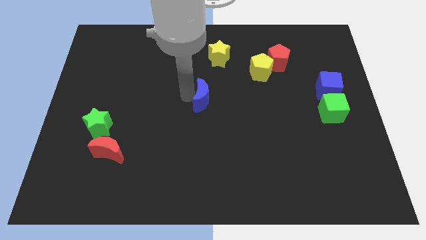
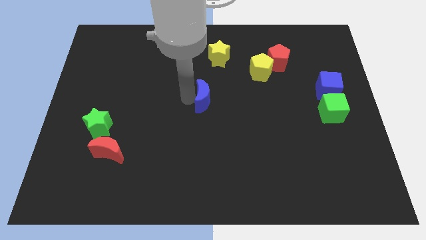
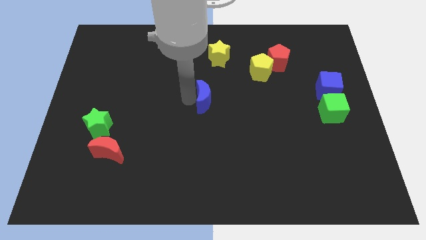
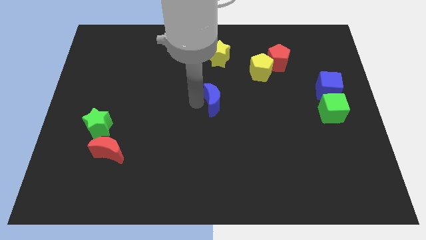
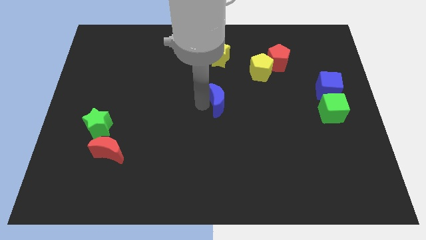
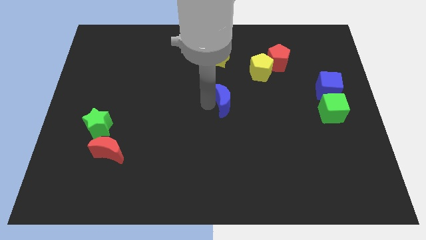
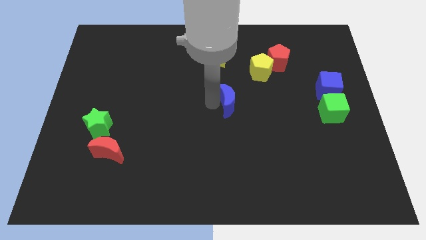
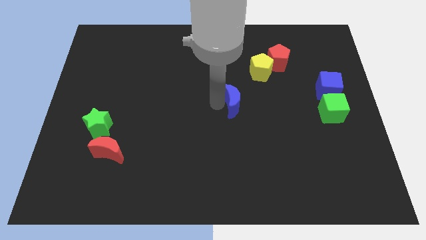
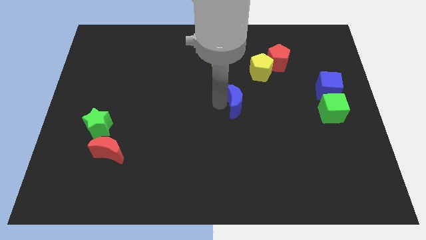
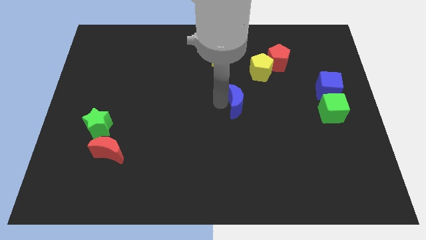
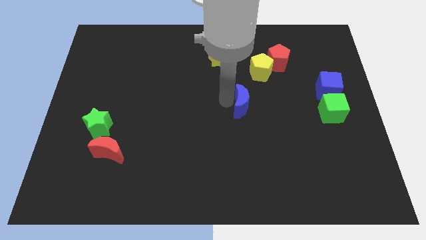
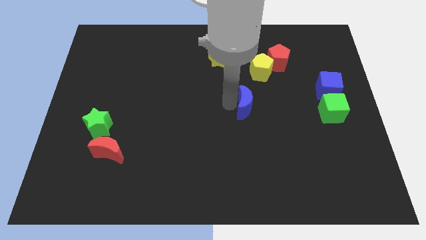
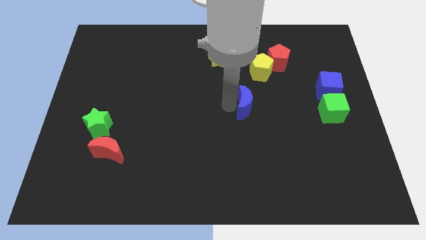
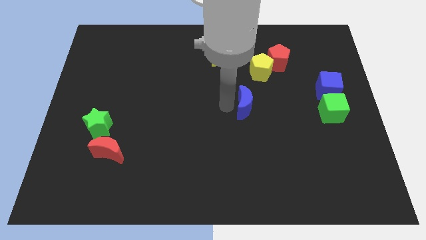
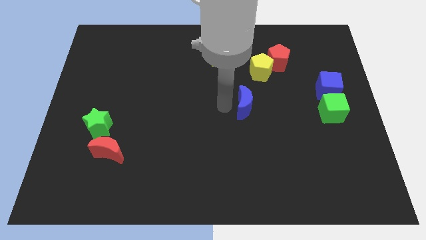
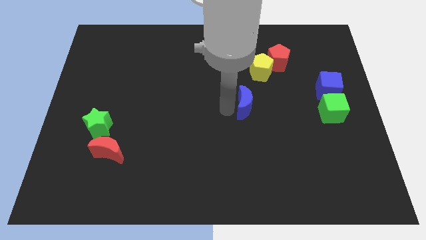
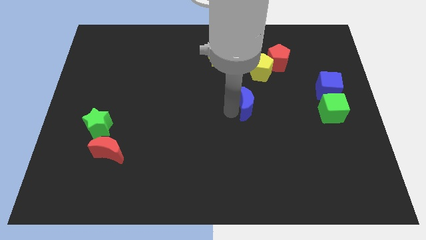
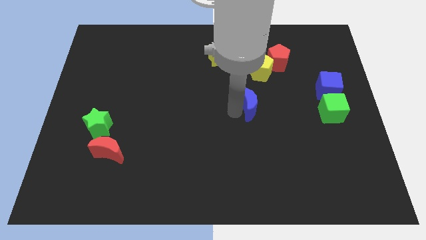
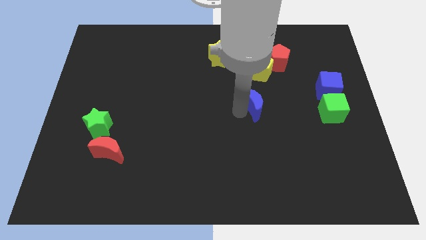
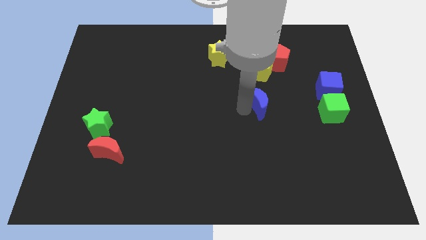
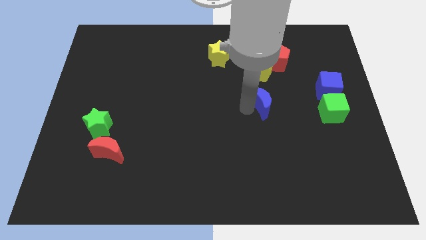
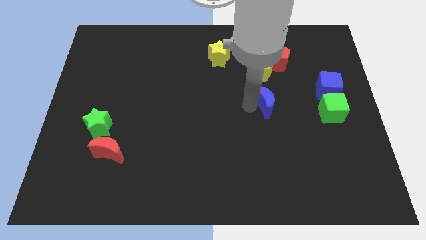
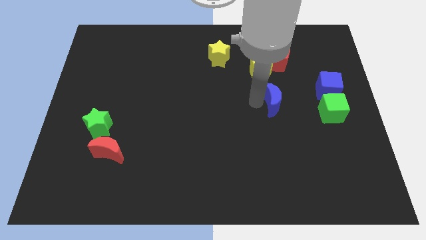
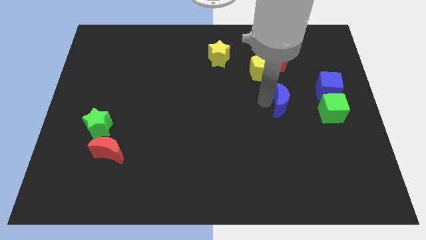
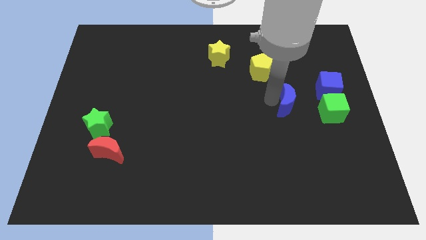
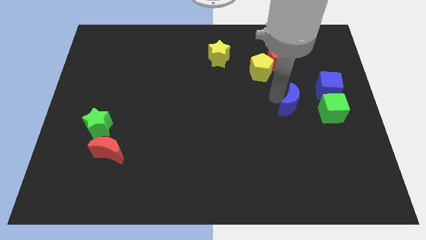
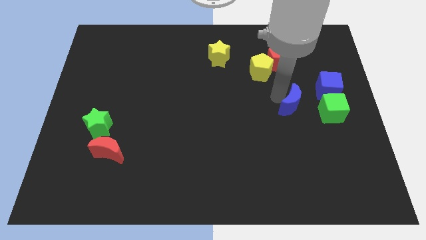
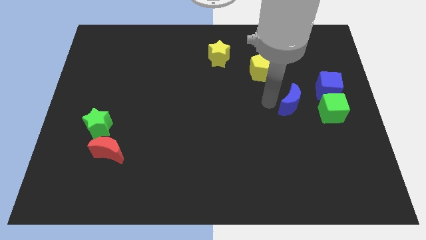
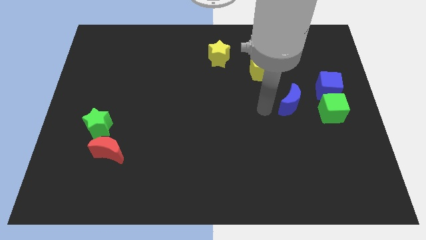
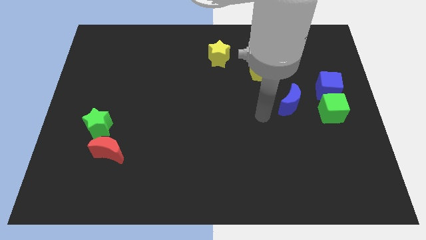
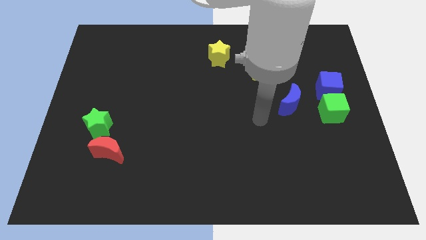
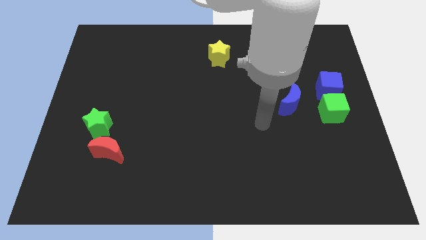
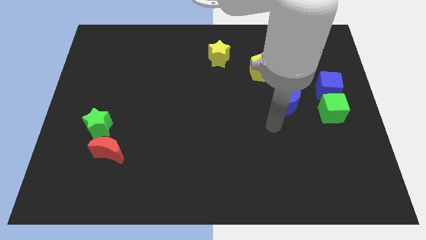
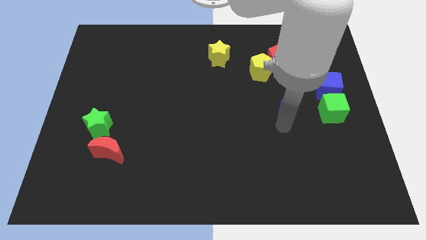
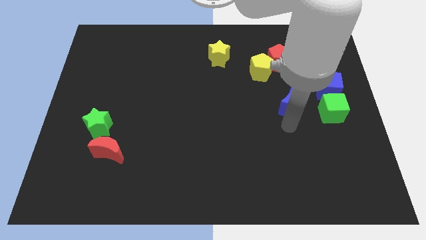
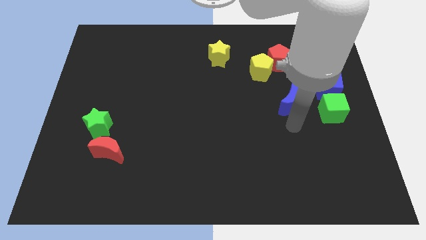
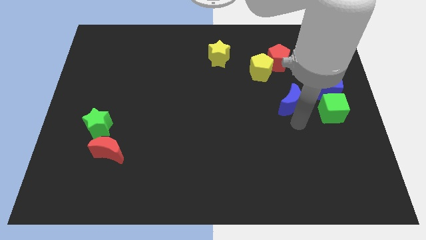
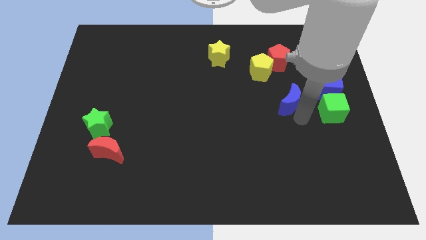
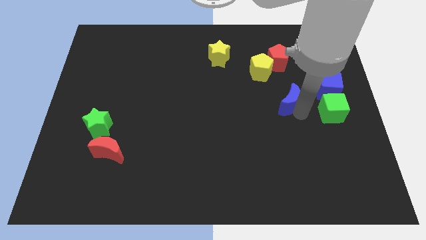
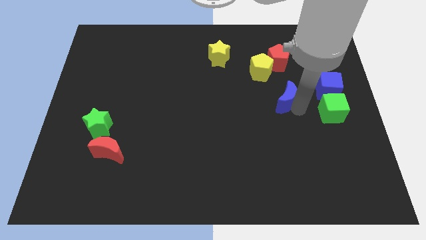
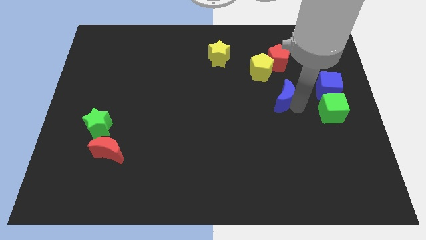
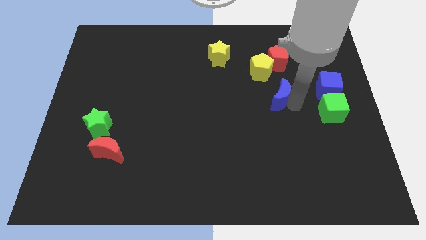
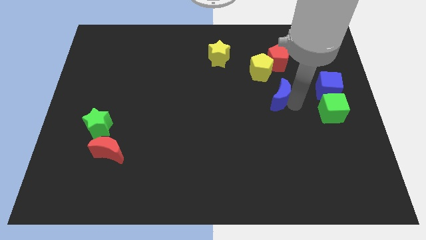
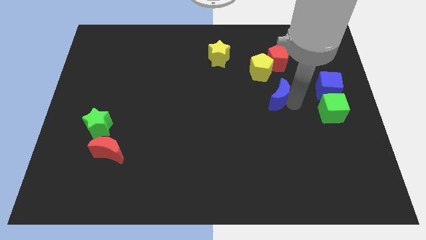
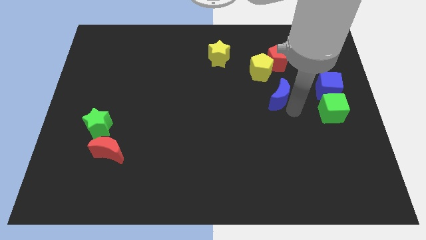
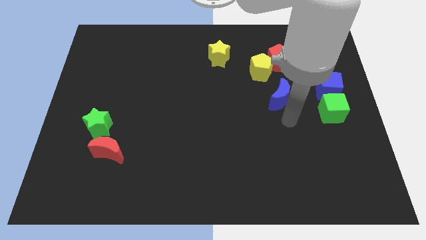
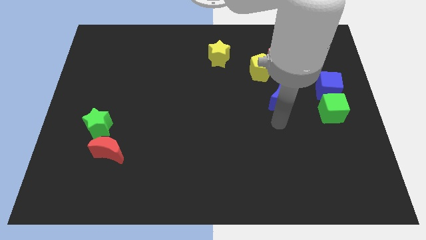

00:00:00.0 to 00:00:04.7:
move the blue moon diagonally bottom right to the yellow pentagon

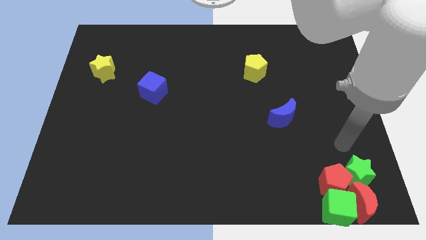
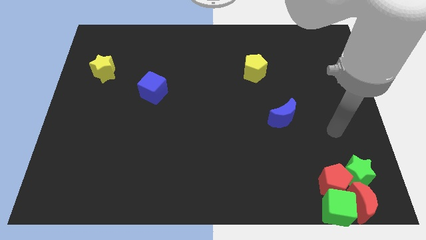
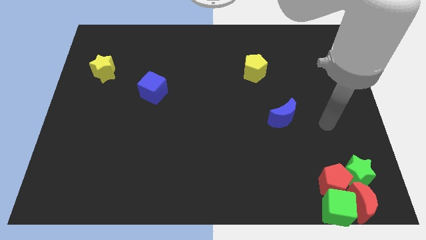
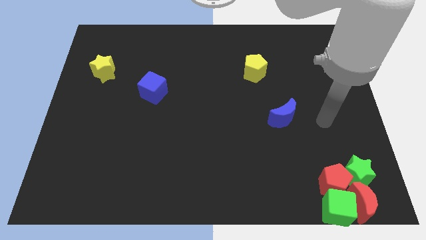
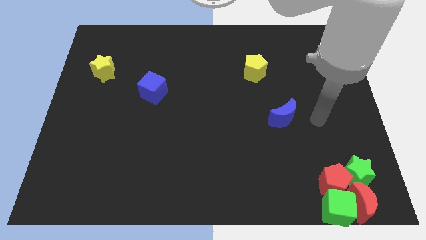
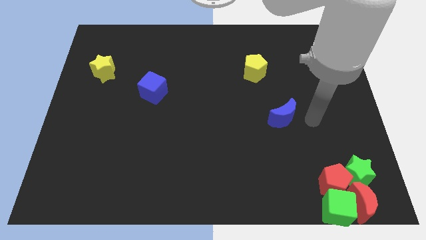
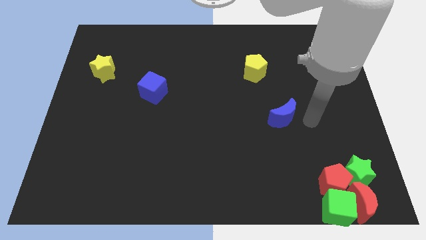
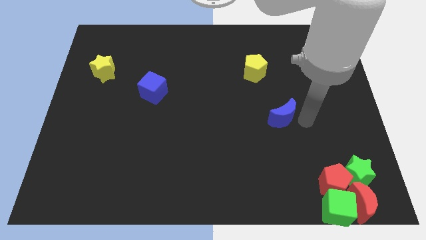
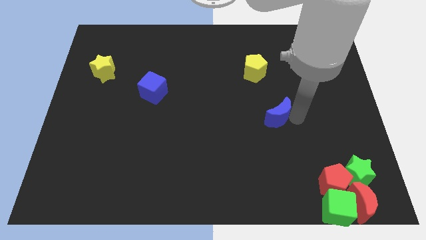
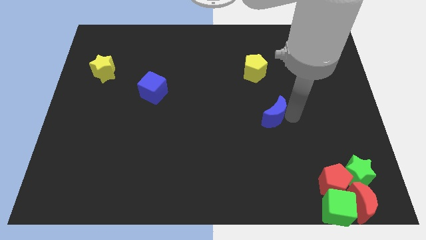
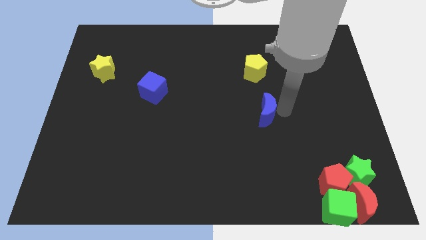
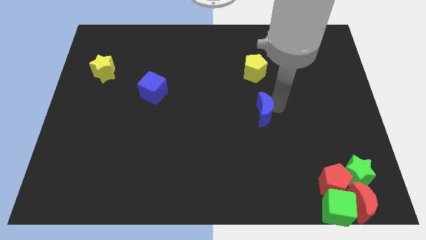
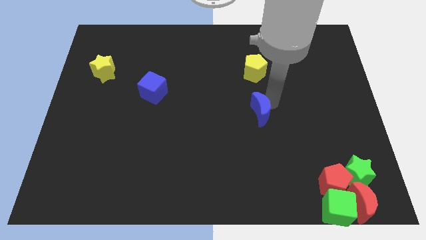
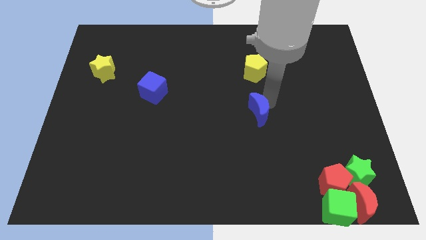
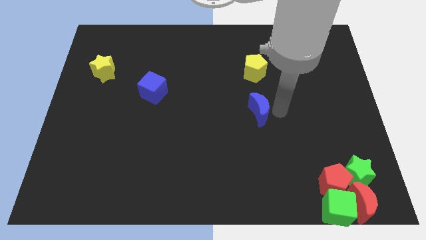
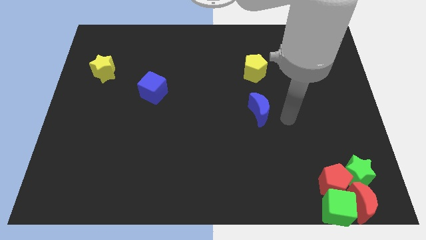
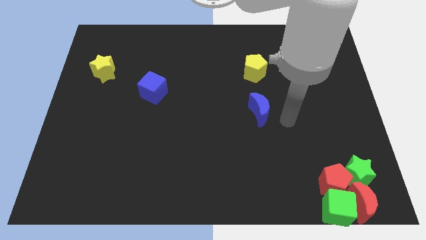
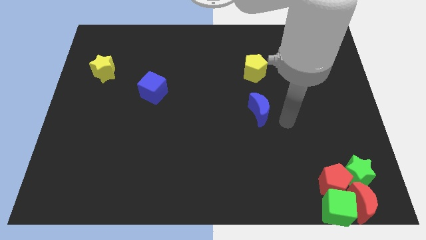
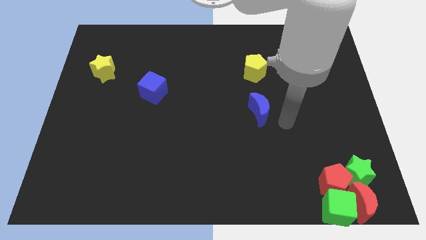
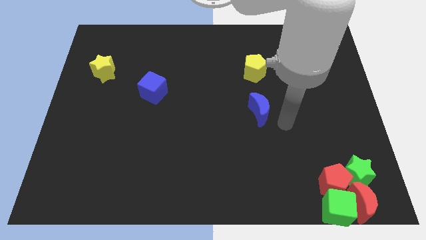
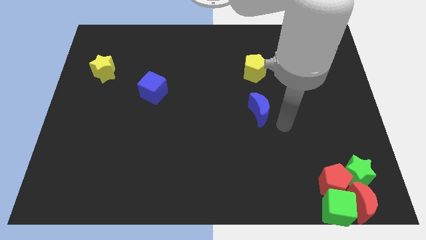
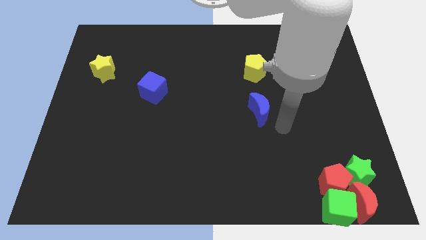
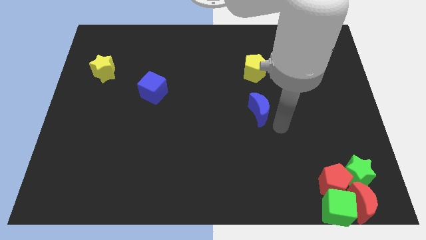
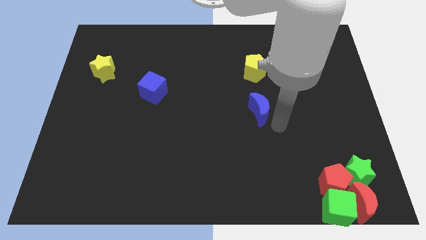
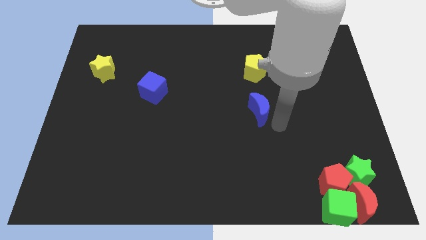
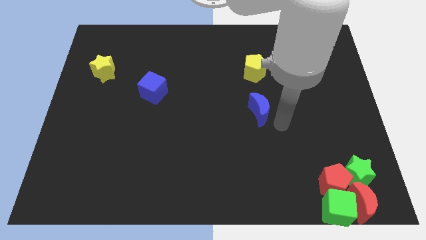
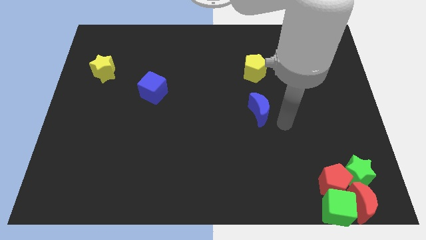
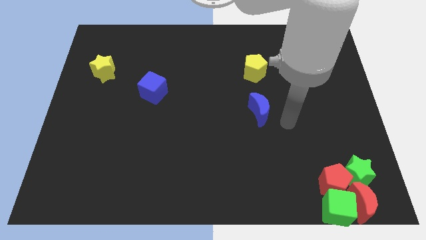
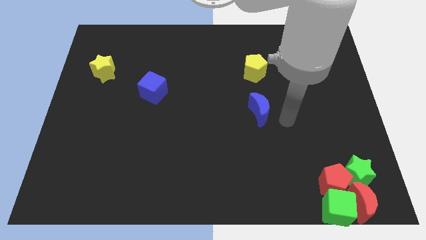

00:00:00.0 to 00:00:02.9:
put the blue crescent below the yellow pentagon

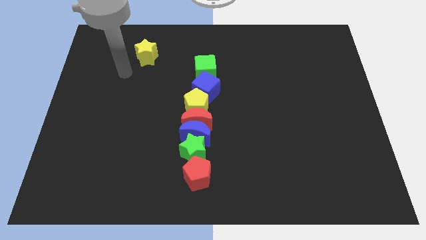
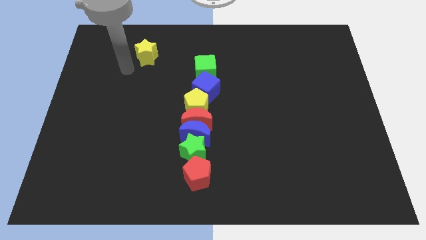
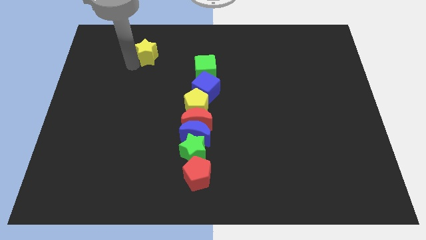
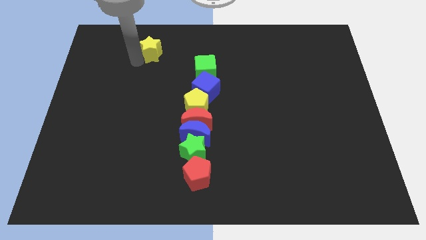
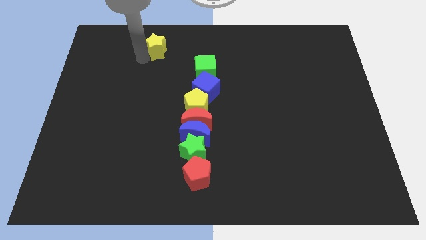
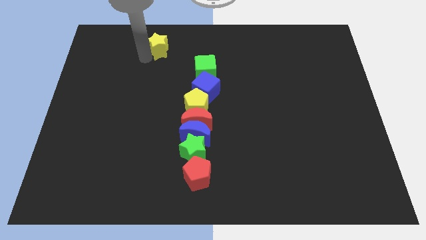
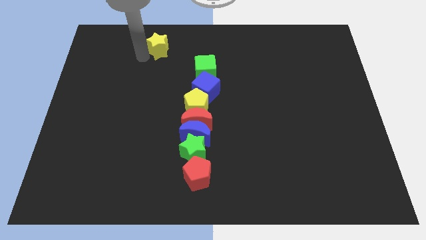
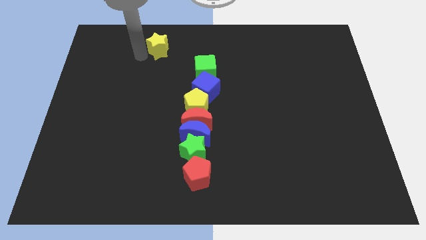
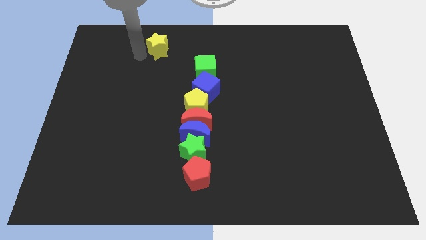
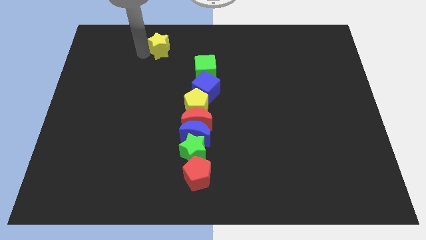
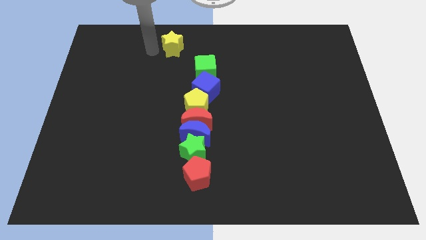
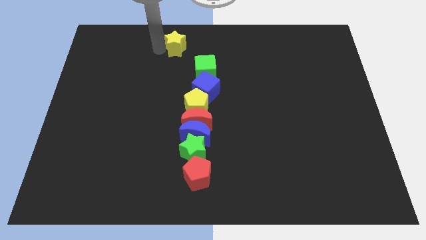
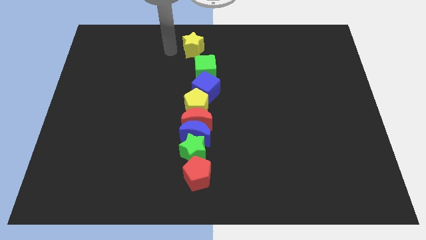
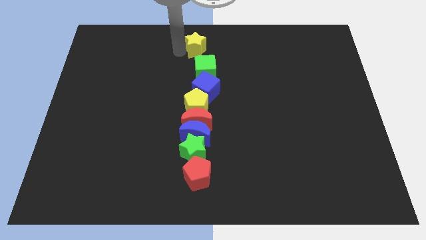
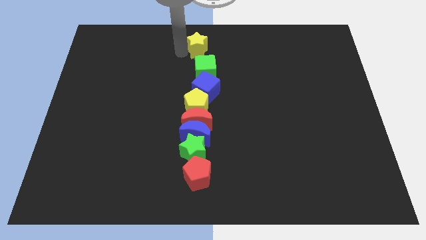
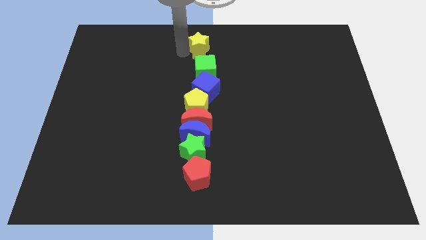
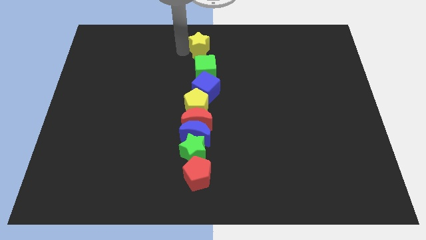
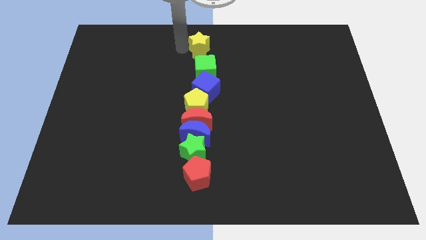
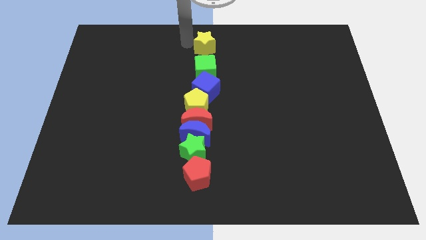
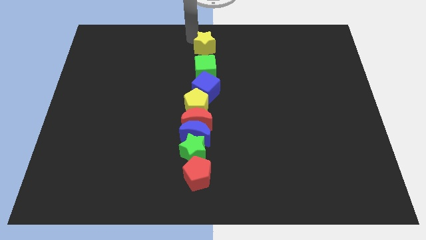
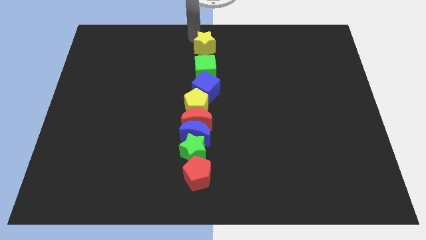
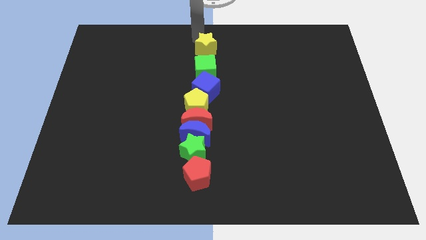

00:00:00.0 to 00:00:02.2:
push yellow star into the green cube
